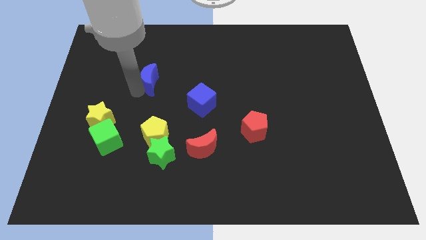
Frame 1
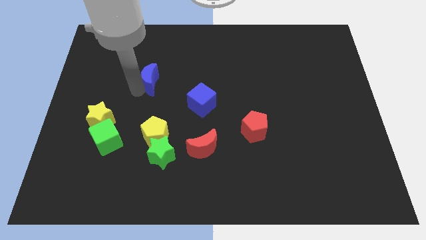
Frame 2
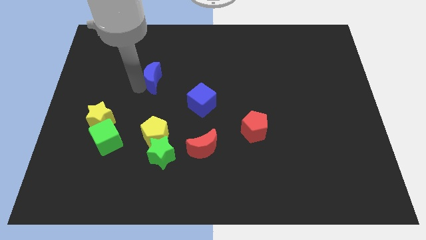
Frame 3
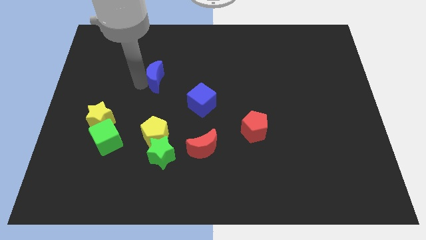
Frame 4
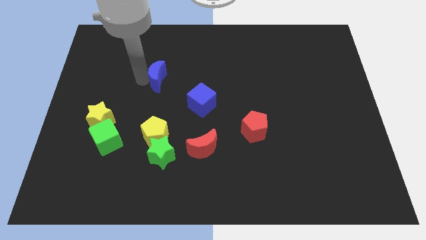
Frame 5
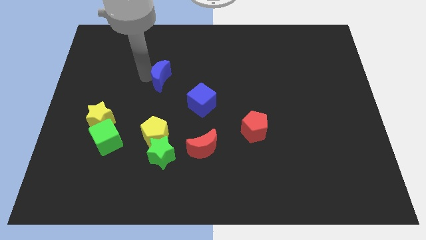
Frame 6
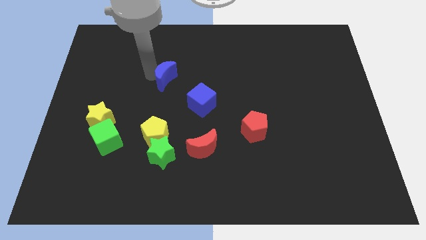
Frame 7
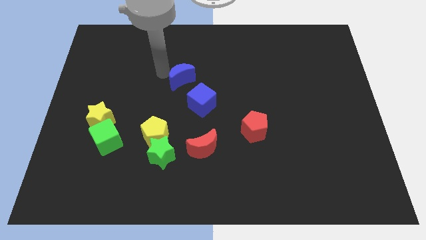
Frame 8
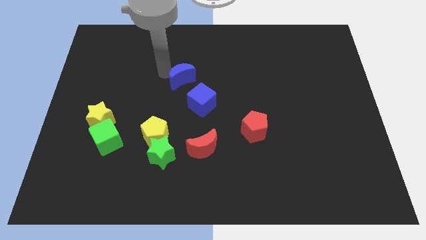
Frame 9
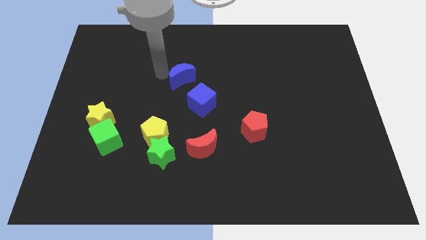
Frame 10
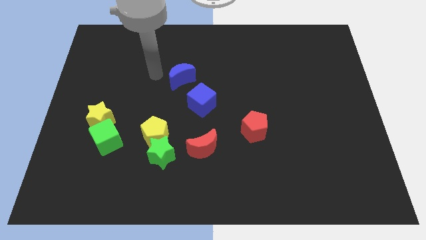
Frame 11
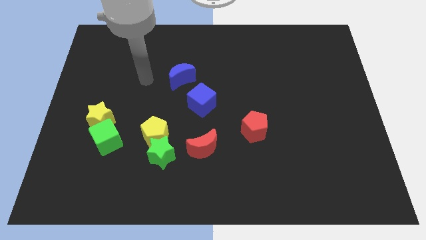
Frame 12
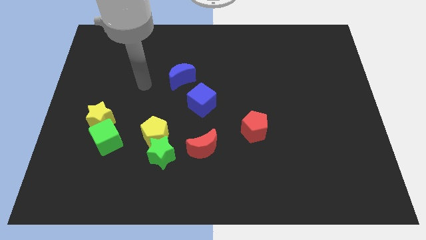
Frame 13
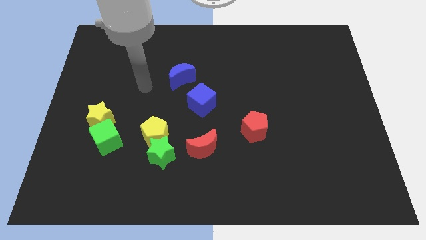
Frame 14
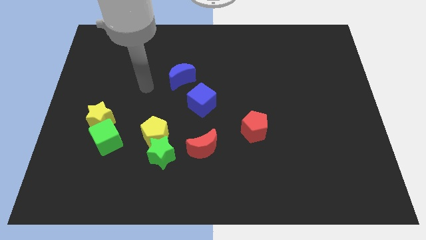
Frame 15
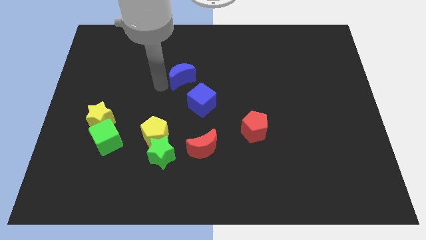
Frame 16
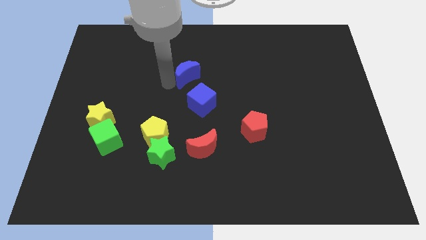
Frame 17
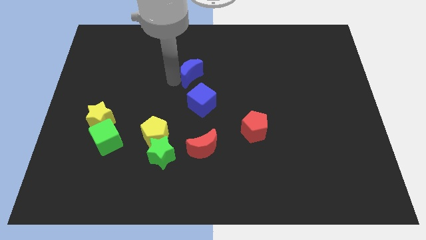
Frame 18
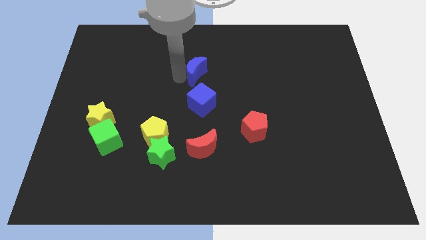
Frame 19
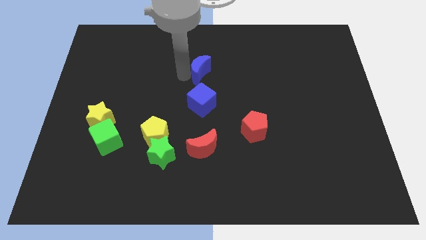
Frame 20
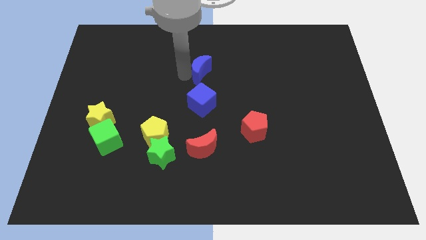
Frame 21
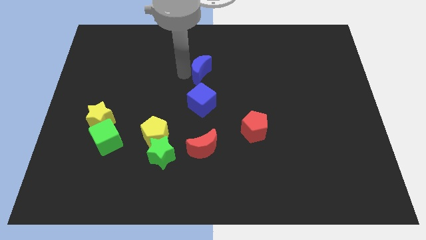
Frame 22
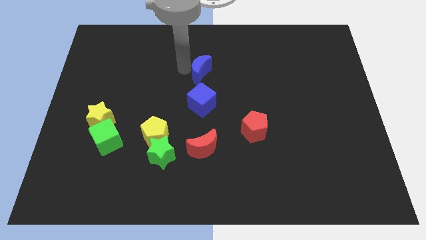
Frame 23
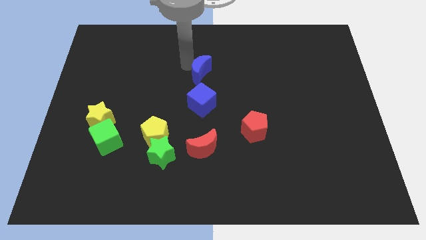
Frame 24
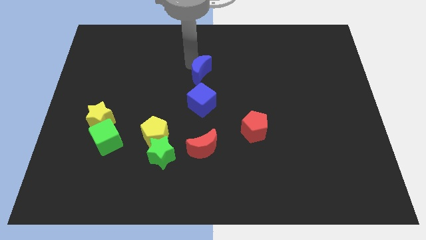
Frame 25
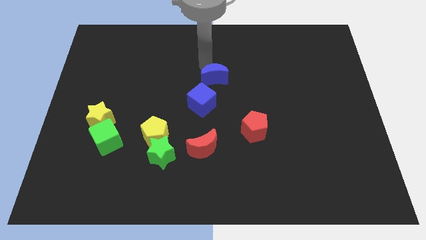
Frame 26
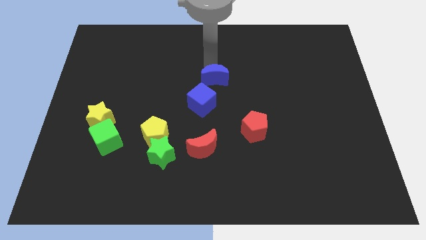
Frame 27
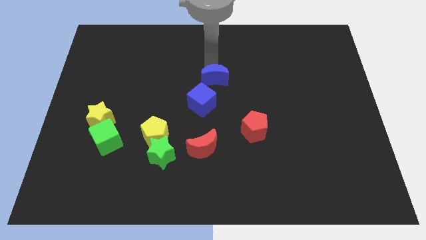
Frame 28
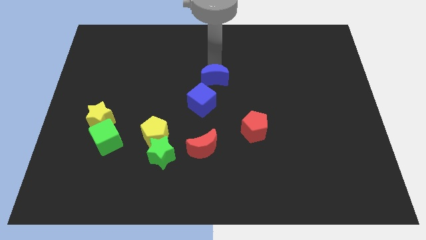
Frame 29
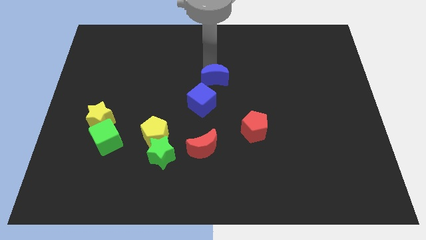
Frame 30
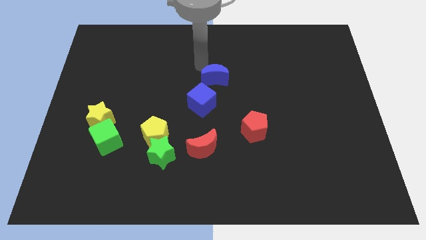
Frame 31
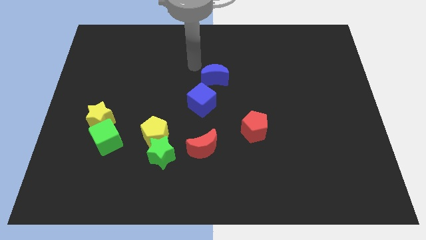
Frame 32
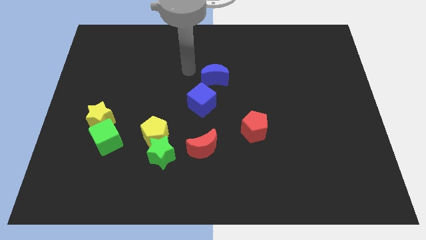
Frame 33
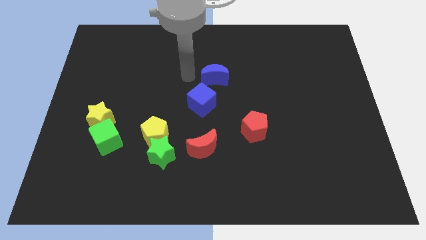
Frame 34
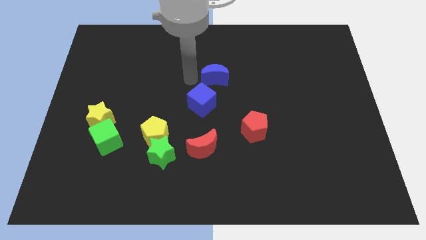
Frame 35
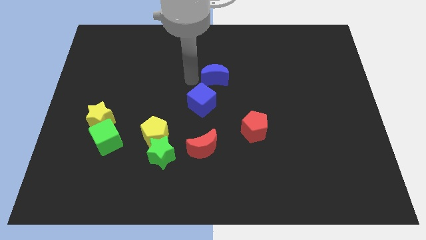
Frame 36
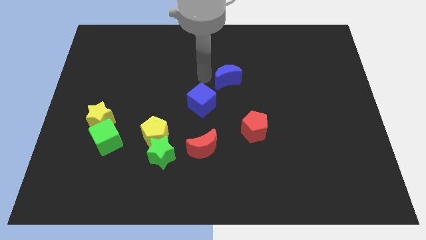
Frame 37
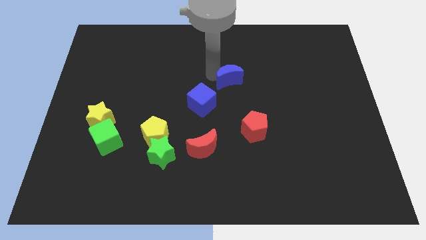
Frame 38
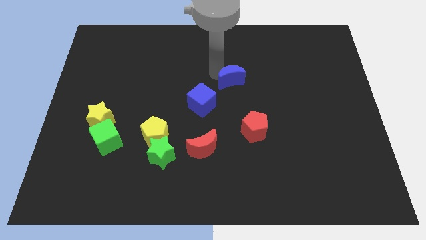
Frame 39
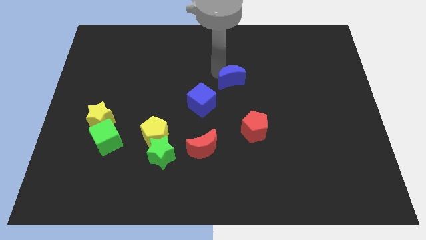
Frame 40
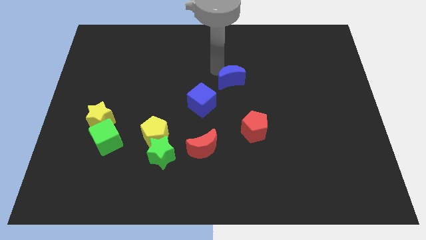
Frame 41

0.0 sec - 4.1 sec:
slide blue moon to the top right of blue cube

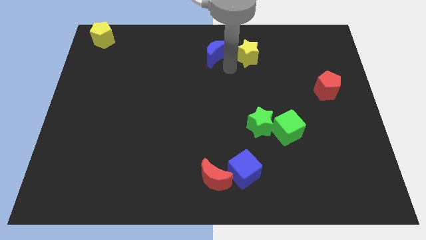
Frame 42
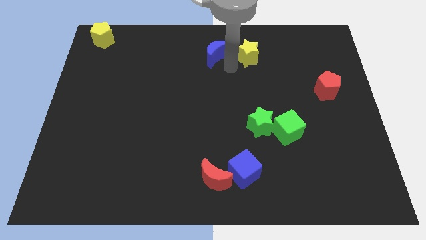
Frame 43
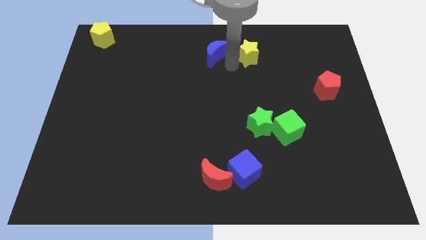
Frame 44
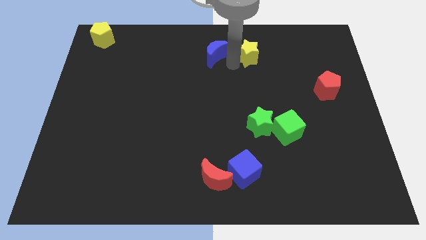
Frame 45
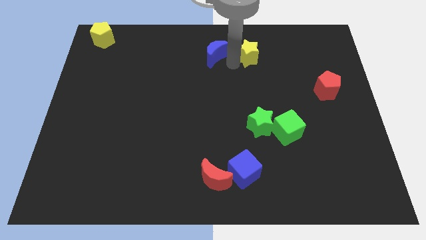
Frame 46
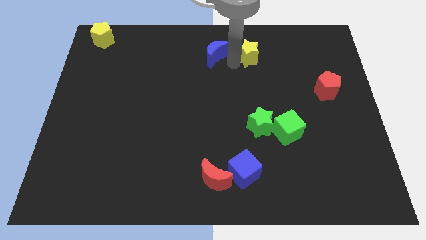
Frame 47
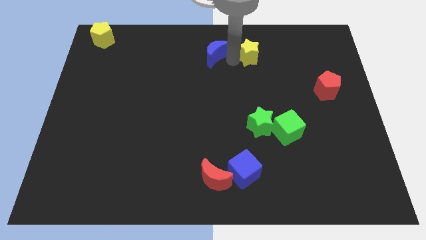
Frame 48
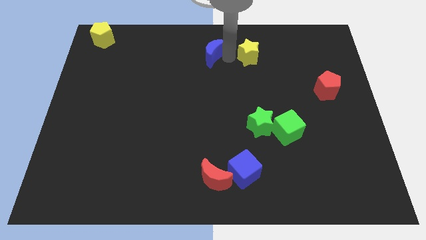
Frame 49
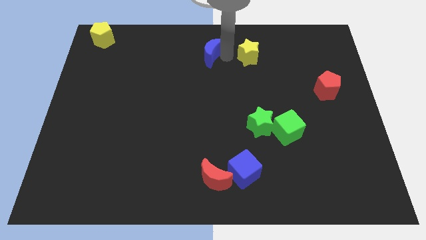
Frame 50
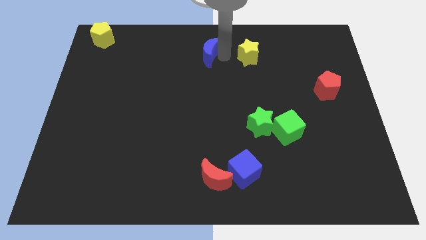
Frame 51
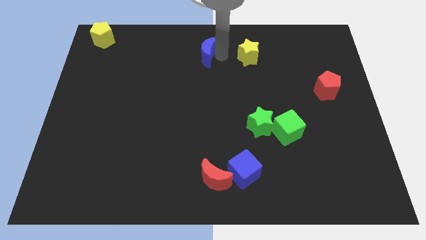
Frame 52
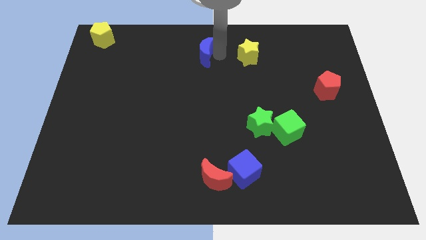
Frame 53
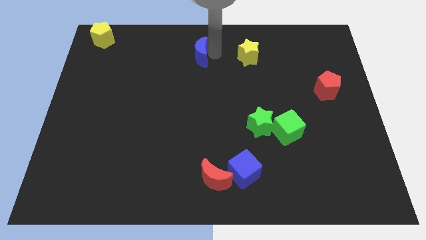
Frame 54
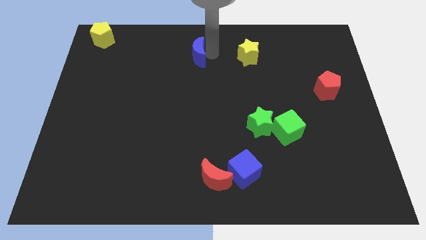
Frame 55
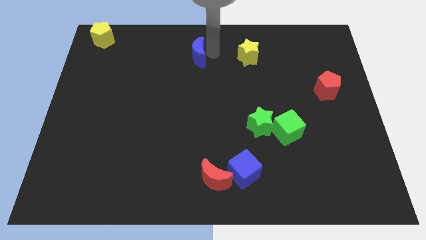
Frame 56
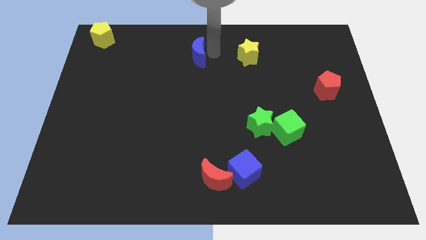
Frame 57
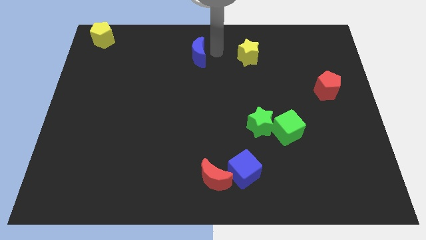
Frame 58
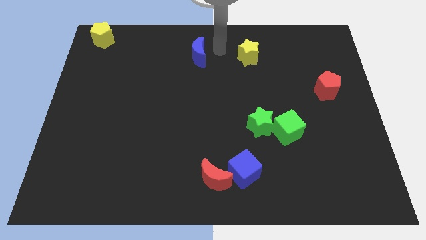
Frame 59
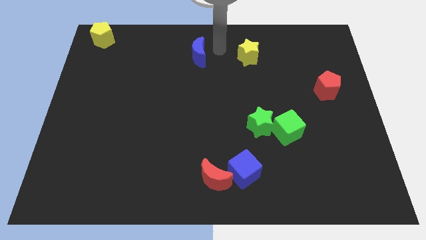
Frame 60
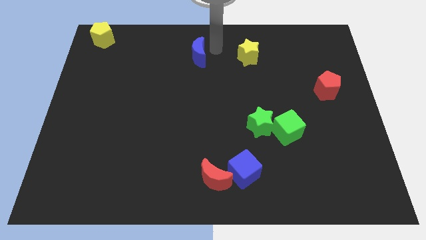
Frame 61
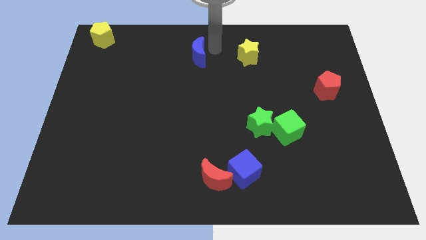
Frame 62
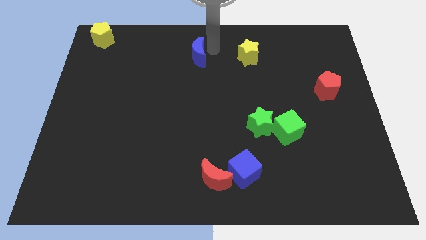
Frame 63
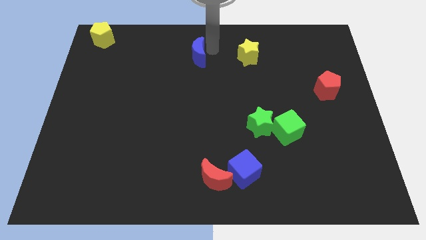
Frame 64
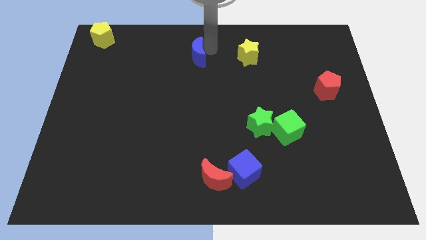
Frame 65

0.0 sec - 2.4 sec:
separate the blue crescent from the yellow star

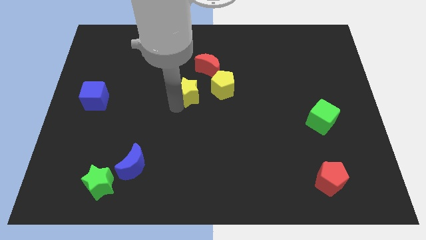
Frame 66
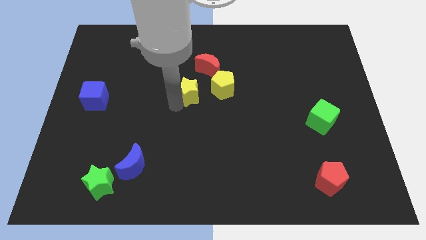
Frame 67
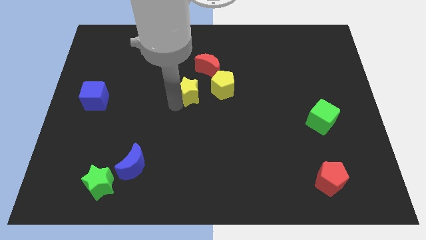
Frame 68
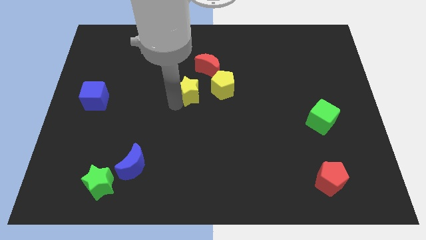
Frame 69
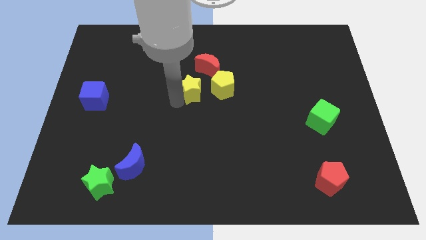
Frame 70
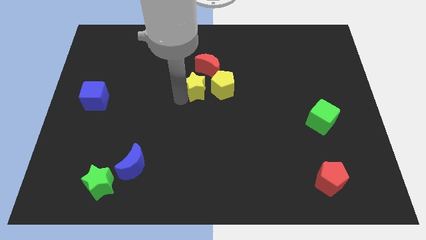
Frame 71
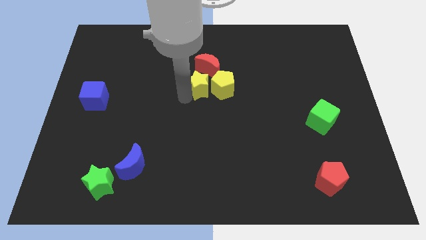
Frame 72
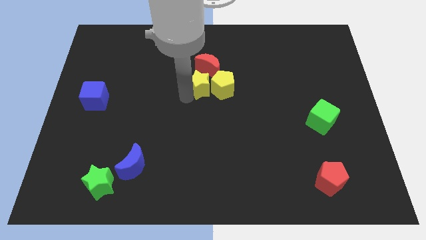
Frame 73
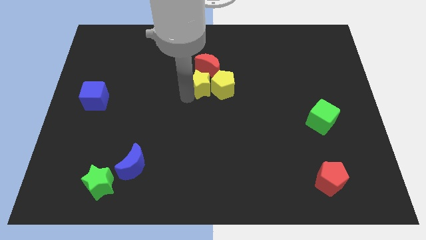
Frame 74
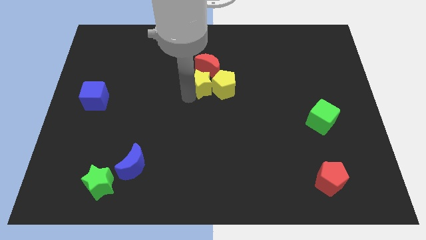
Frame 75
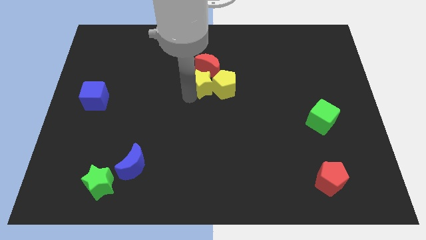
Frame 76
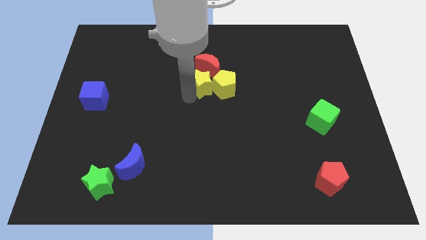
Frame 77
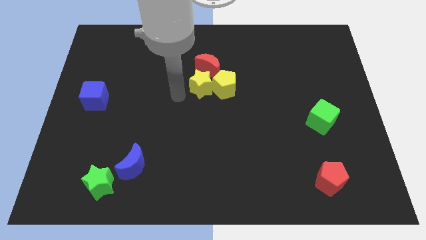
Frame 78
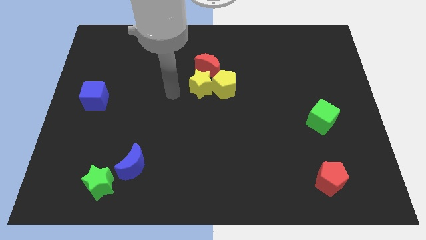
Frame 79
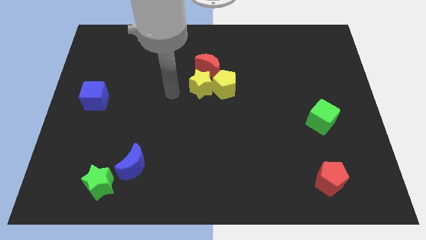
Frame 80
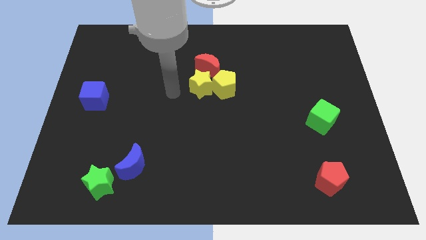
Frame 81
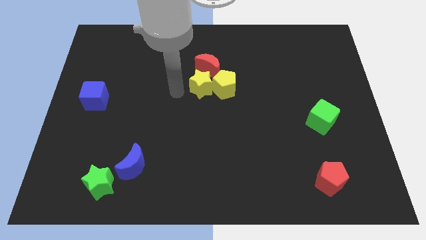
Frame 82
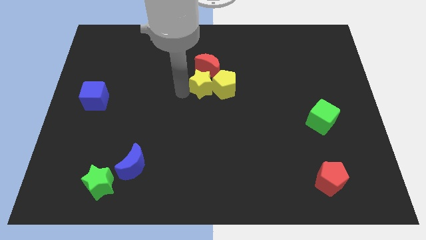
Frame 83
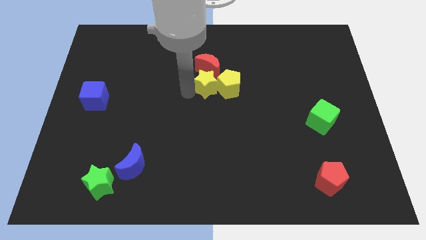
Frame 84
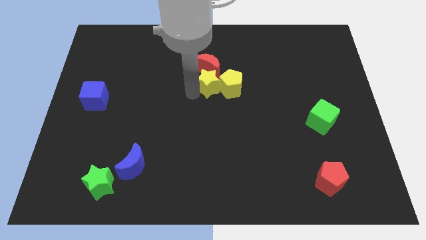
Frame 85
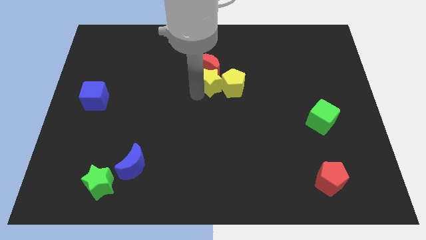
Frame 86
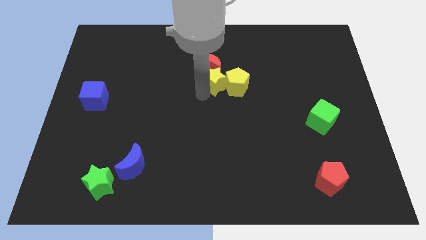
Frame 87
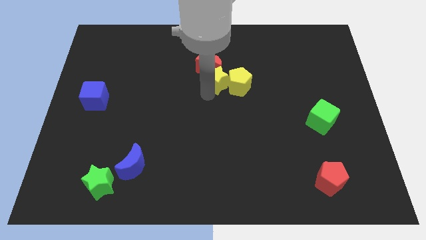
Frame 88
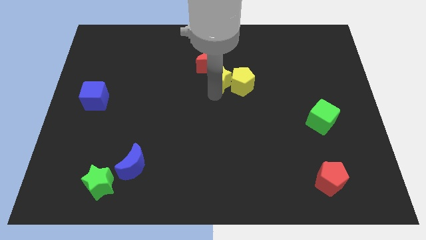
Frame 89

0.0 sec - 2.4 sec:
place the yellow star to the bottom of the red crescent
